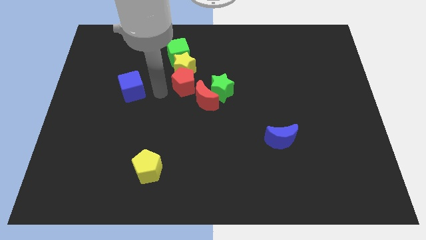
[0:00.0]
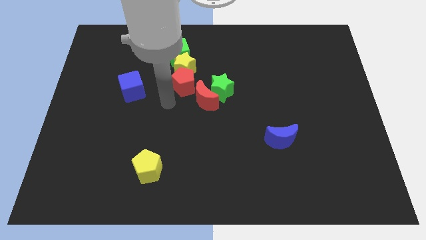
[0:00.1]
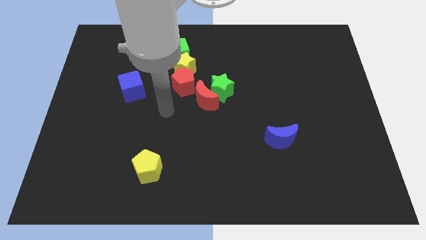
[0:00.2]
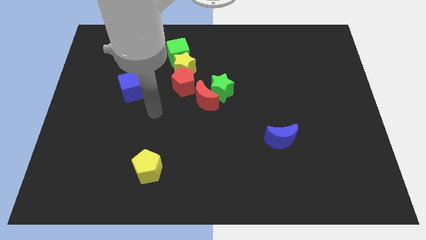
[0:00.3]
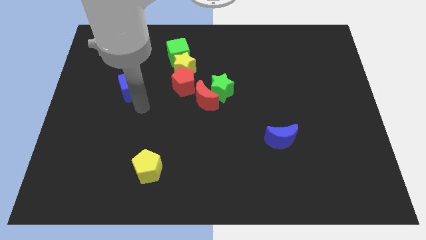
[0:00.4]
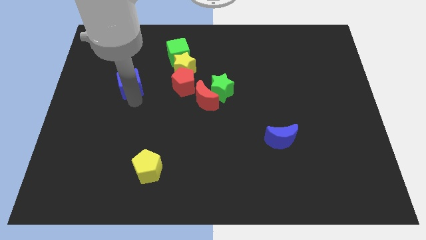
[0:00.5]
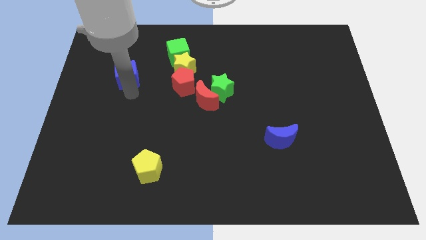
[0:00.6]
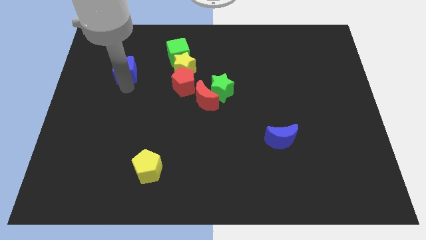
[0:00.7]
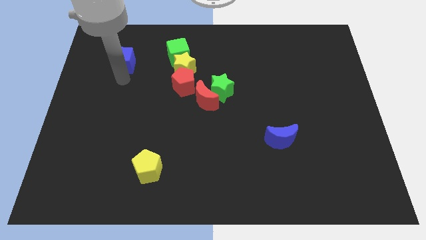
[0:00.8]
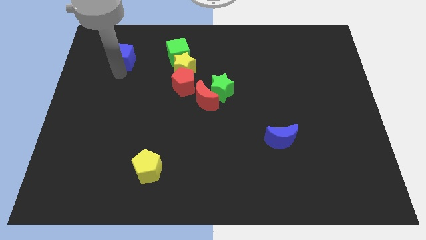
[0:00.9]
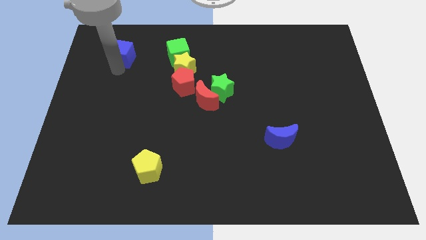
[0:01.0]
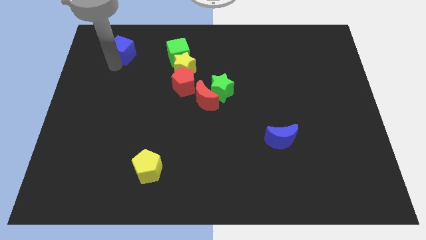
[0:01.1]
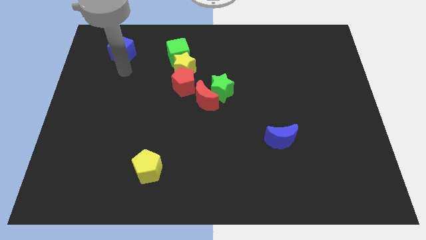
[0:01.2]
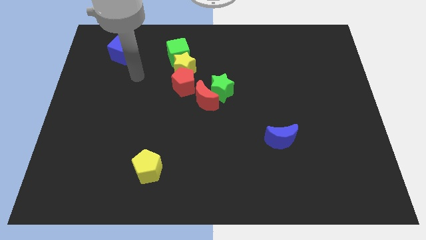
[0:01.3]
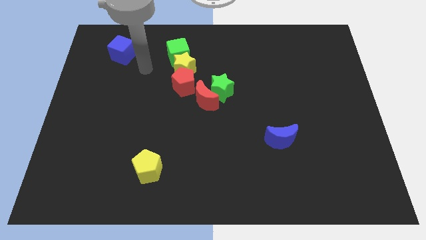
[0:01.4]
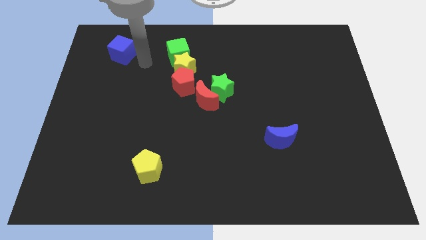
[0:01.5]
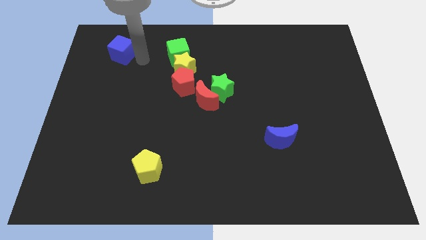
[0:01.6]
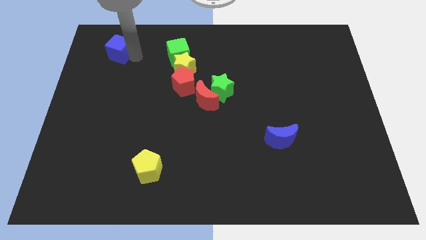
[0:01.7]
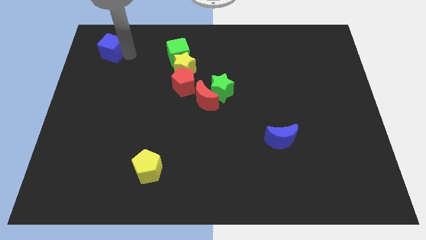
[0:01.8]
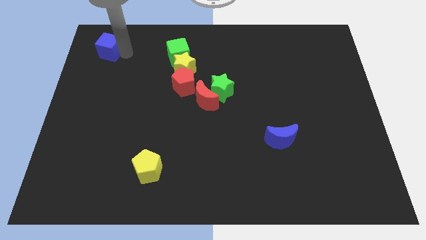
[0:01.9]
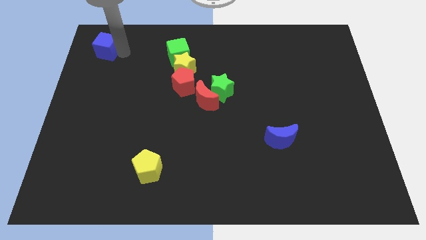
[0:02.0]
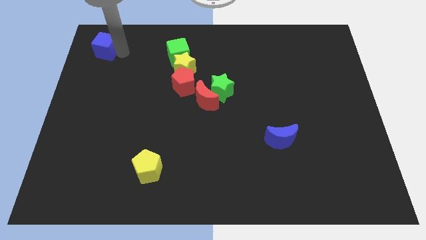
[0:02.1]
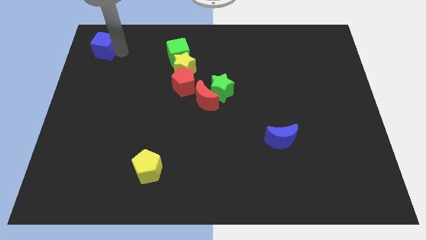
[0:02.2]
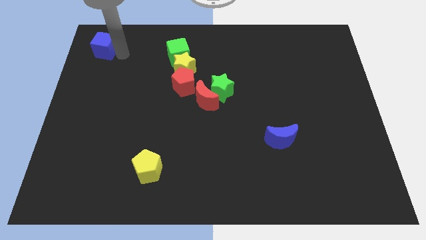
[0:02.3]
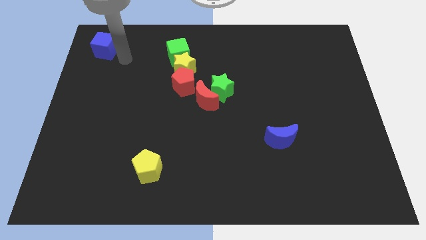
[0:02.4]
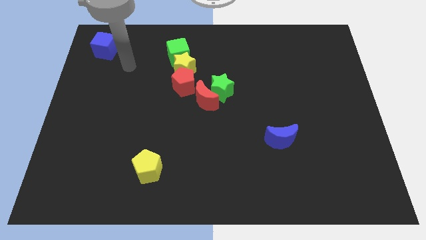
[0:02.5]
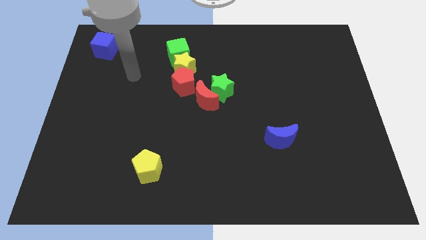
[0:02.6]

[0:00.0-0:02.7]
move the blue cube to the top left corner of the board

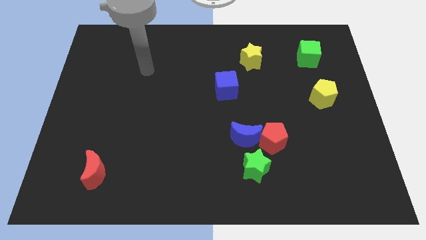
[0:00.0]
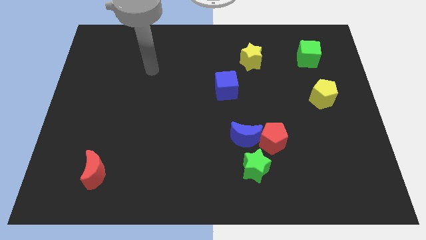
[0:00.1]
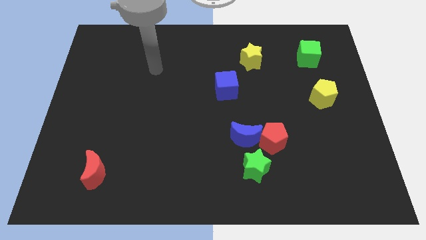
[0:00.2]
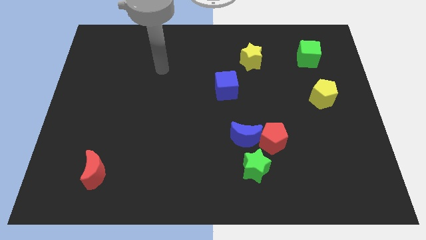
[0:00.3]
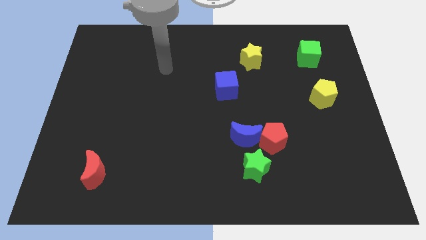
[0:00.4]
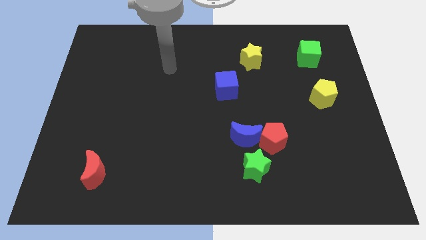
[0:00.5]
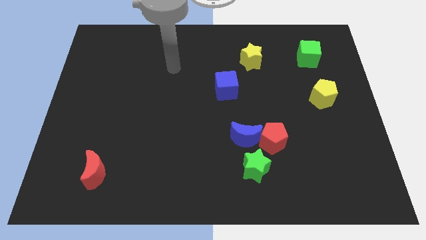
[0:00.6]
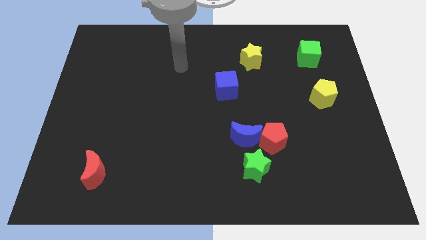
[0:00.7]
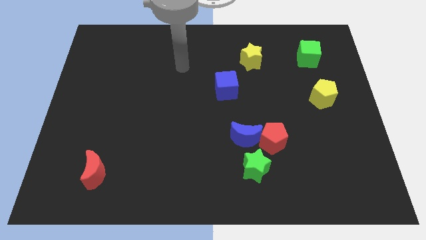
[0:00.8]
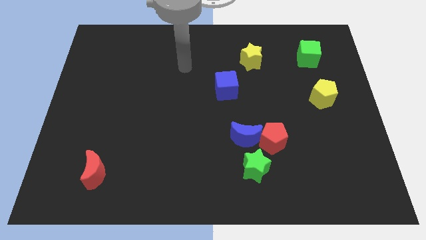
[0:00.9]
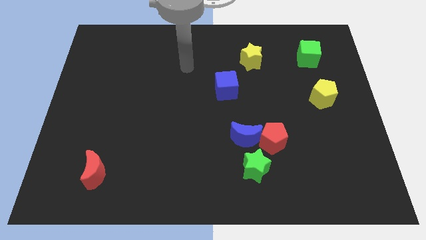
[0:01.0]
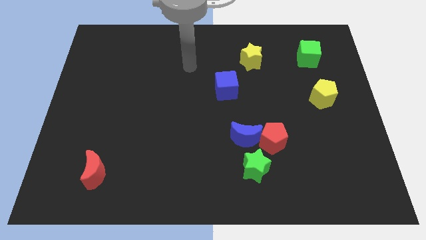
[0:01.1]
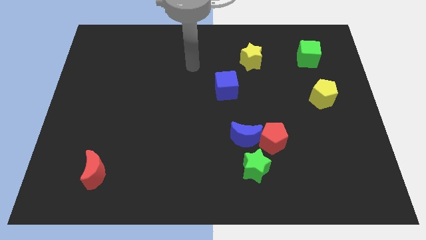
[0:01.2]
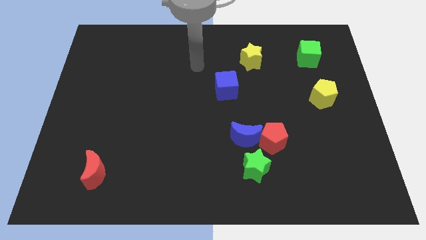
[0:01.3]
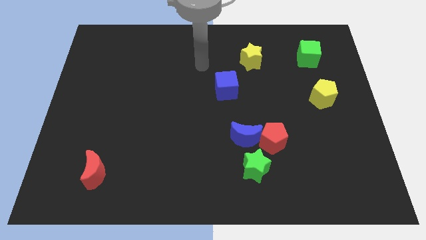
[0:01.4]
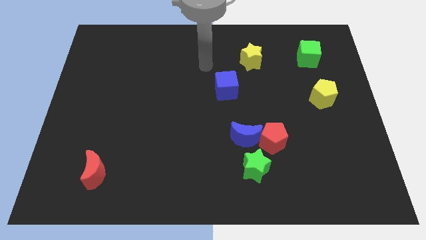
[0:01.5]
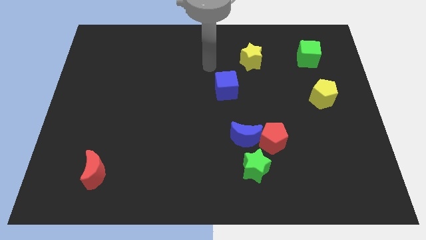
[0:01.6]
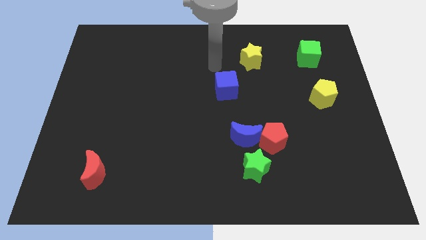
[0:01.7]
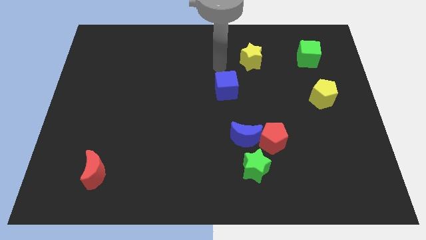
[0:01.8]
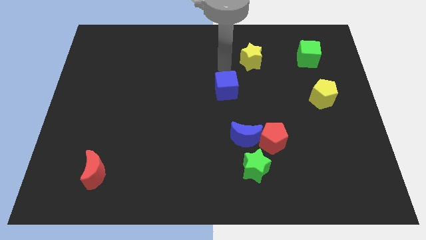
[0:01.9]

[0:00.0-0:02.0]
move your arm towards the blue cube

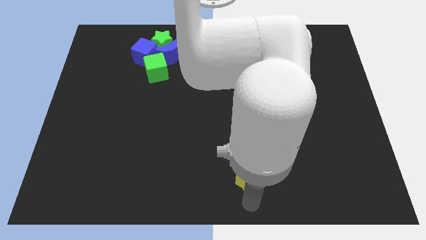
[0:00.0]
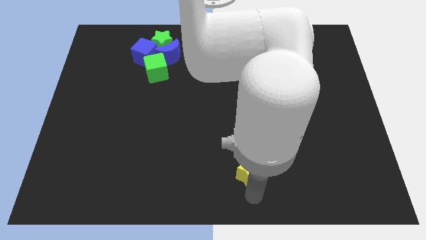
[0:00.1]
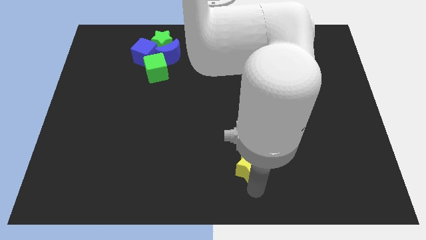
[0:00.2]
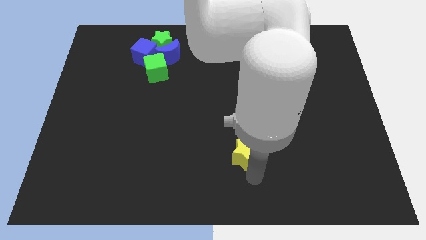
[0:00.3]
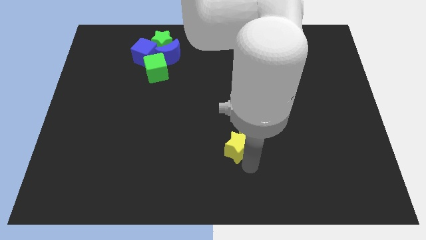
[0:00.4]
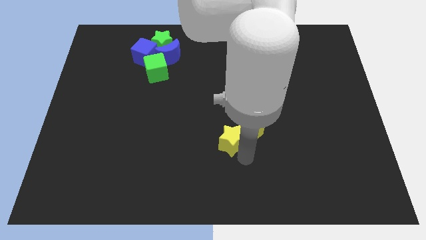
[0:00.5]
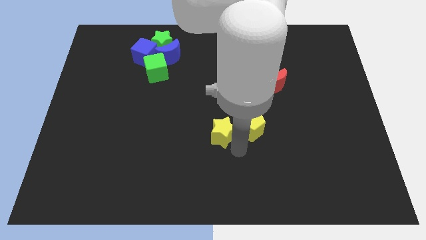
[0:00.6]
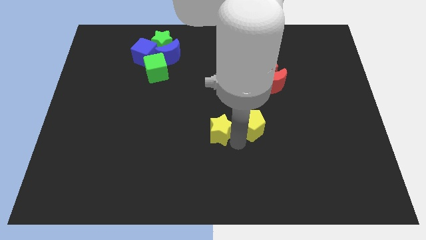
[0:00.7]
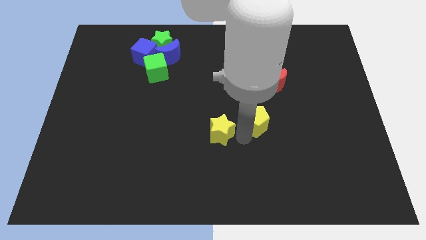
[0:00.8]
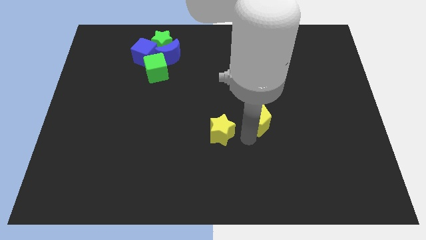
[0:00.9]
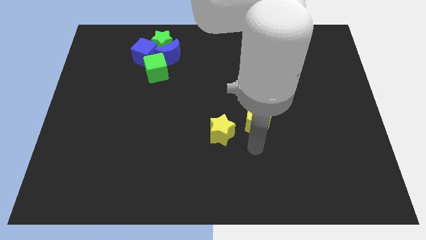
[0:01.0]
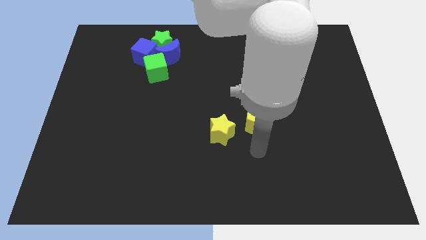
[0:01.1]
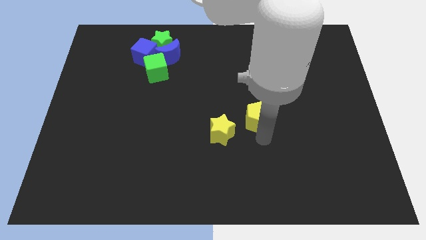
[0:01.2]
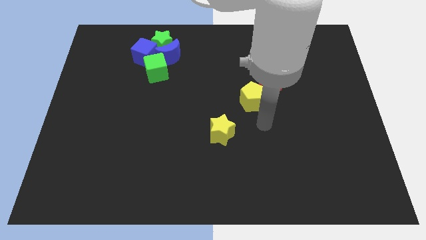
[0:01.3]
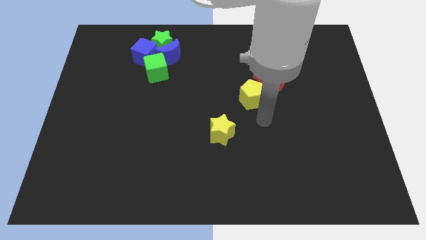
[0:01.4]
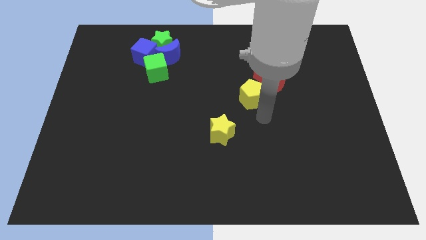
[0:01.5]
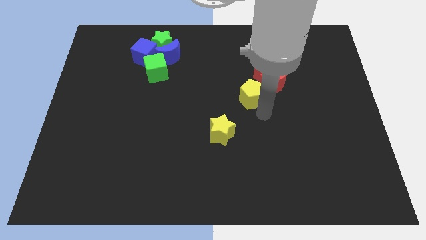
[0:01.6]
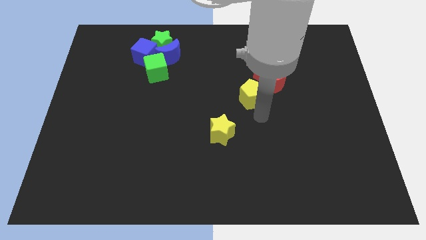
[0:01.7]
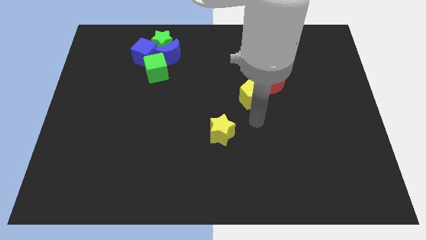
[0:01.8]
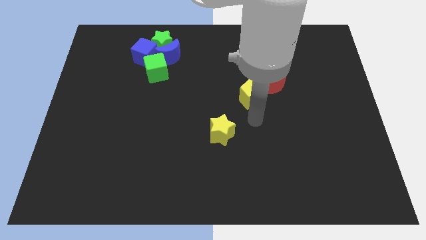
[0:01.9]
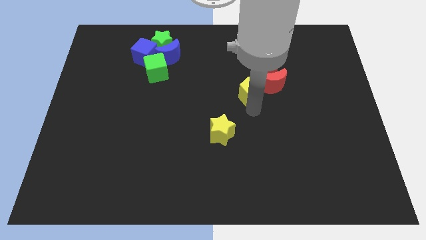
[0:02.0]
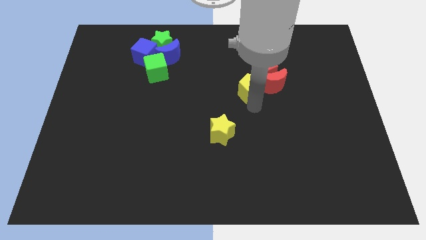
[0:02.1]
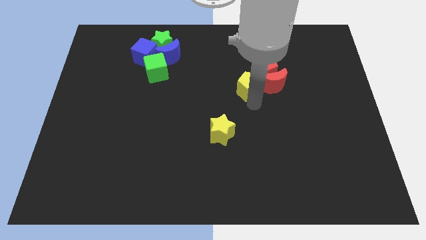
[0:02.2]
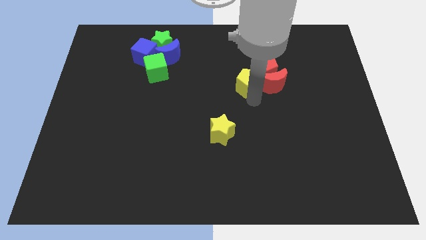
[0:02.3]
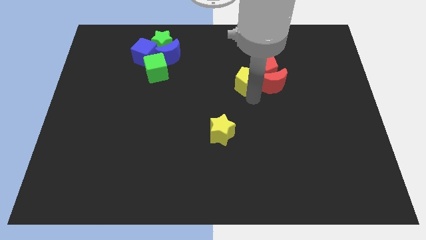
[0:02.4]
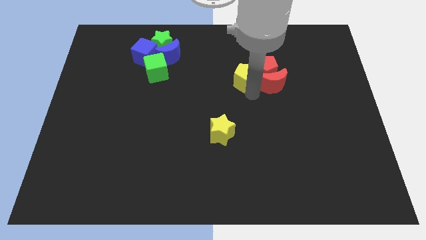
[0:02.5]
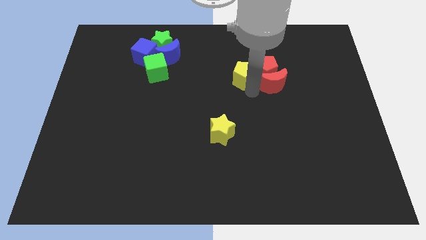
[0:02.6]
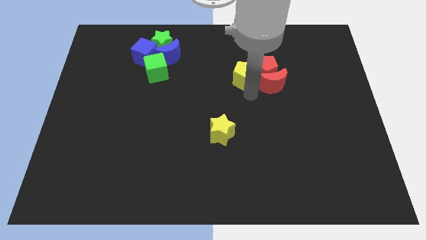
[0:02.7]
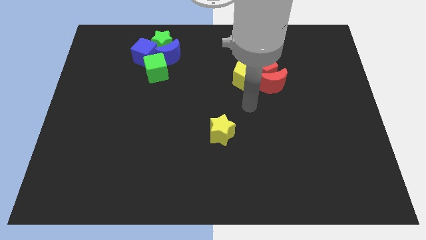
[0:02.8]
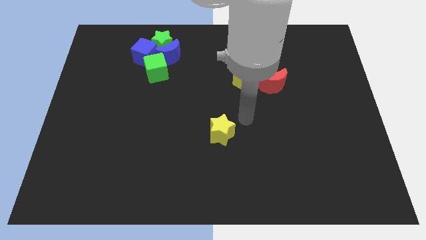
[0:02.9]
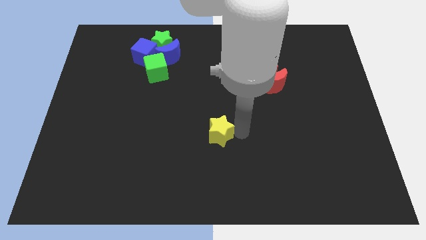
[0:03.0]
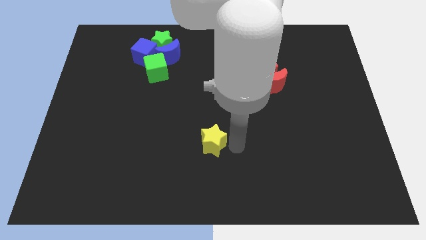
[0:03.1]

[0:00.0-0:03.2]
move the yellow pentagon to the left of red pentagon

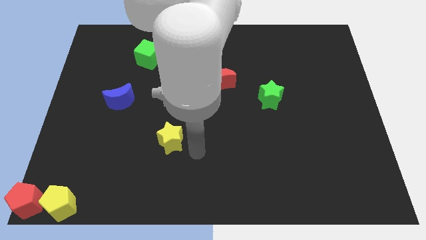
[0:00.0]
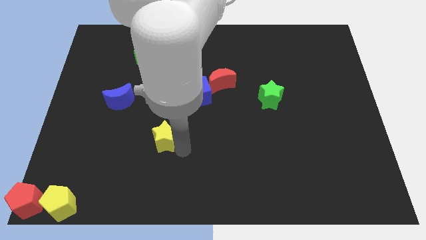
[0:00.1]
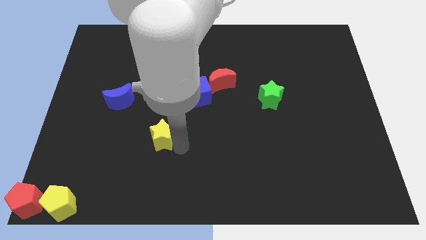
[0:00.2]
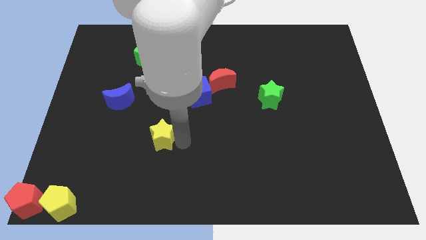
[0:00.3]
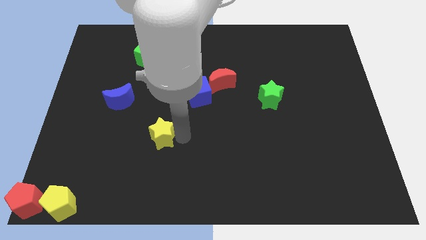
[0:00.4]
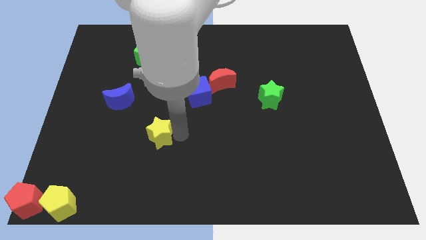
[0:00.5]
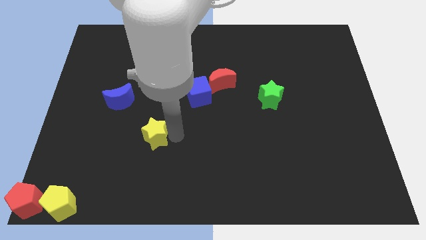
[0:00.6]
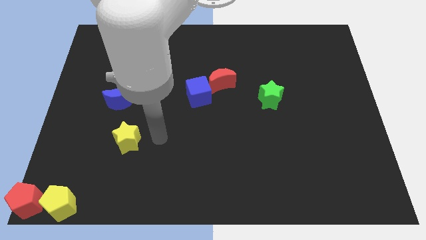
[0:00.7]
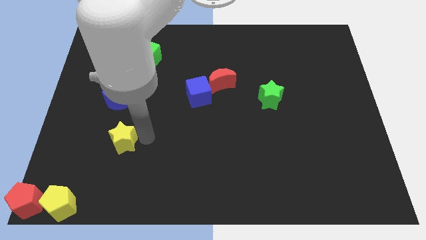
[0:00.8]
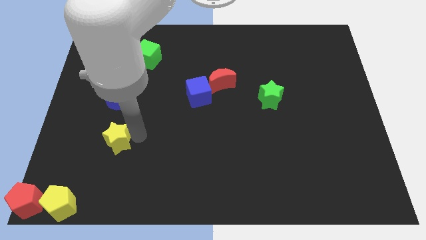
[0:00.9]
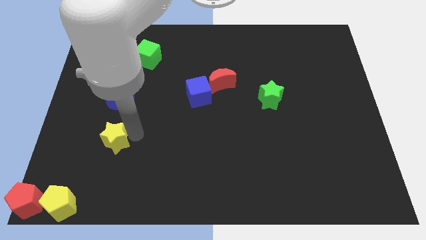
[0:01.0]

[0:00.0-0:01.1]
place yellow star below blue moon
